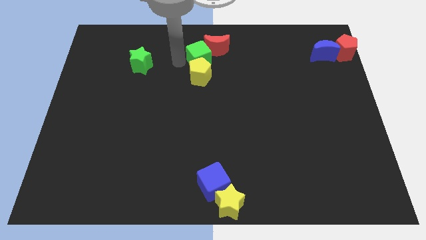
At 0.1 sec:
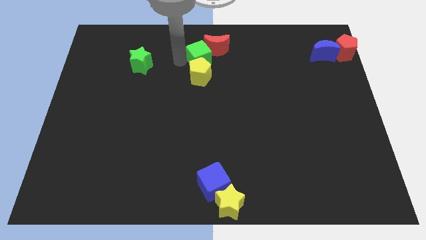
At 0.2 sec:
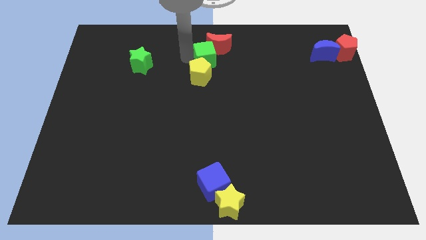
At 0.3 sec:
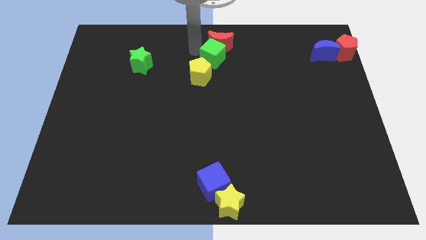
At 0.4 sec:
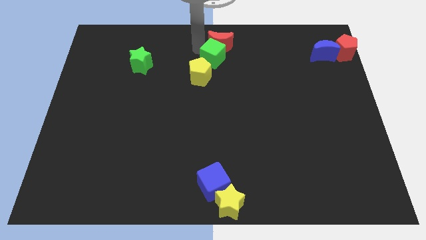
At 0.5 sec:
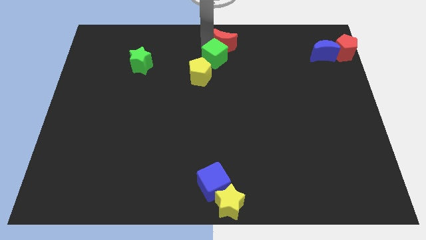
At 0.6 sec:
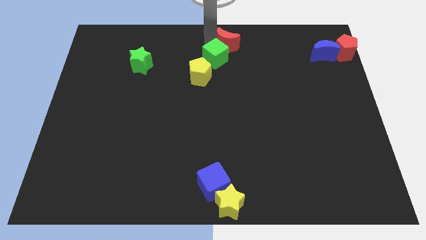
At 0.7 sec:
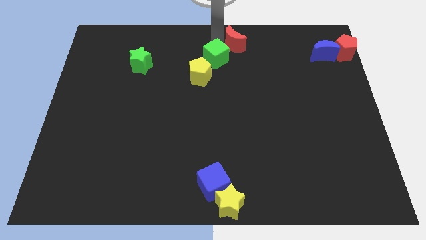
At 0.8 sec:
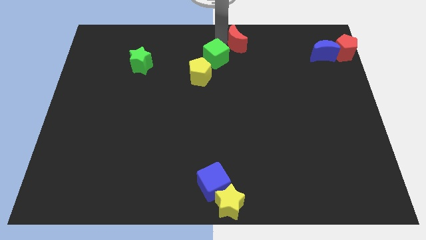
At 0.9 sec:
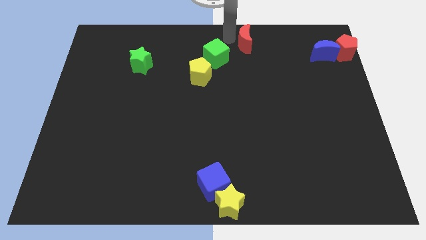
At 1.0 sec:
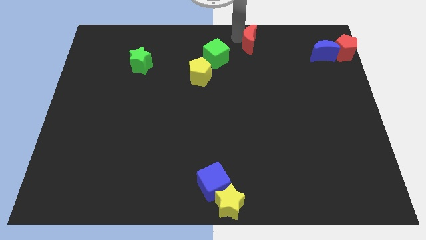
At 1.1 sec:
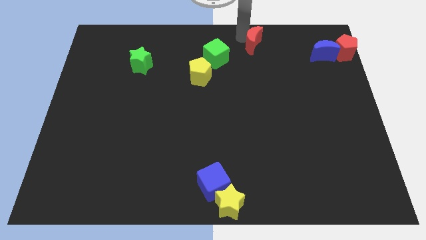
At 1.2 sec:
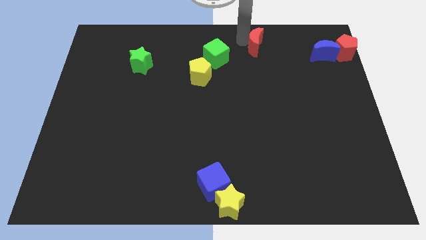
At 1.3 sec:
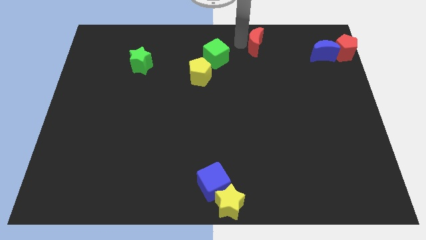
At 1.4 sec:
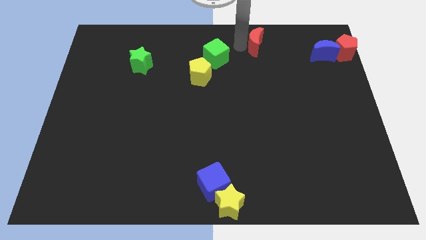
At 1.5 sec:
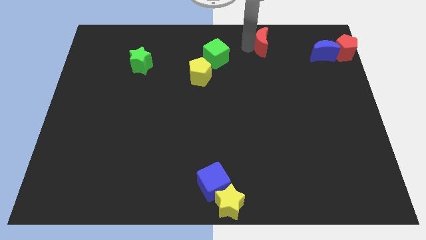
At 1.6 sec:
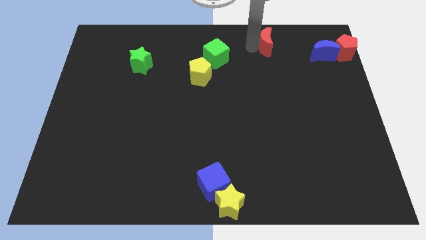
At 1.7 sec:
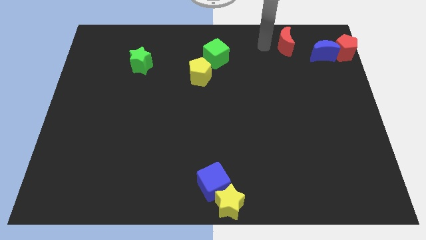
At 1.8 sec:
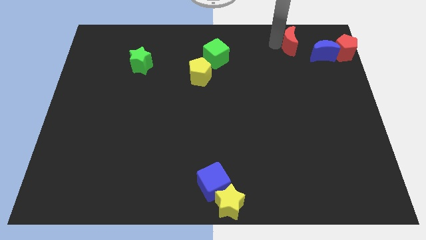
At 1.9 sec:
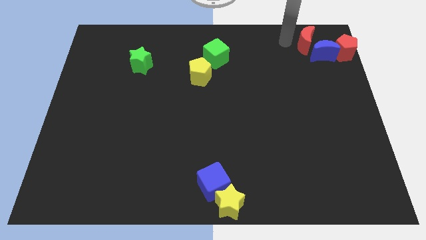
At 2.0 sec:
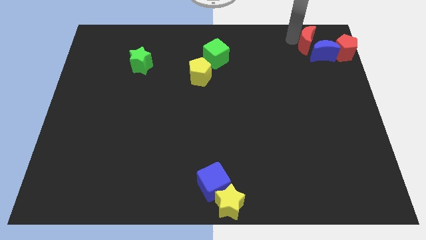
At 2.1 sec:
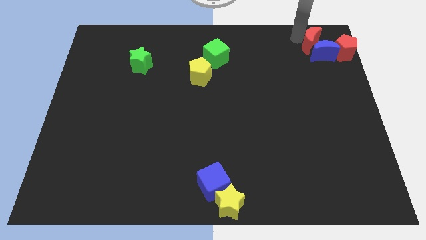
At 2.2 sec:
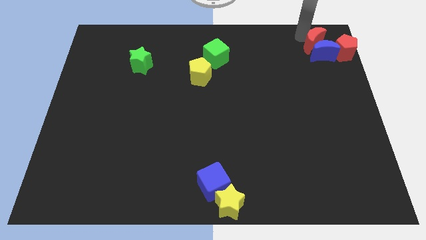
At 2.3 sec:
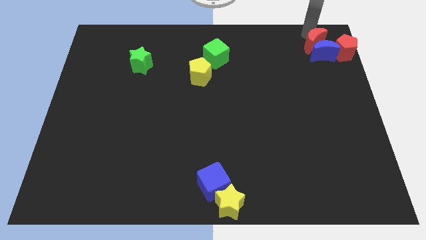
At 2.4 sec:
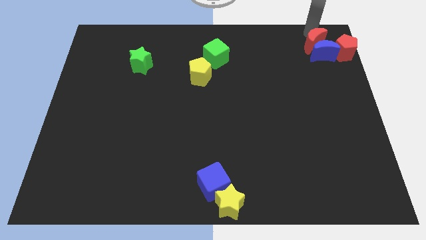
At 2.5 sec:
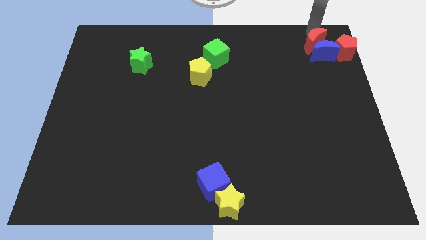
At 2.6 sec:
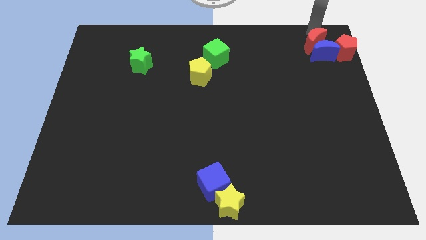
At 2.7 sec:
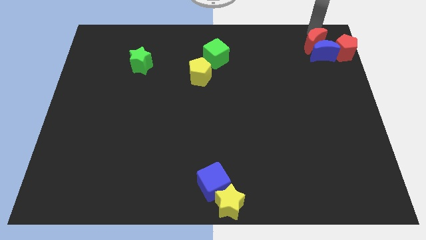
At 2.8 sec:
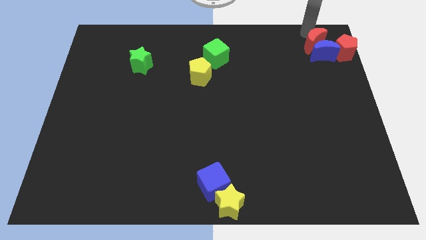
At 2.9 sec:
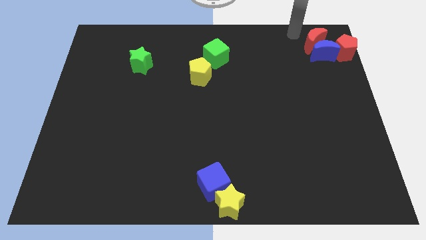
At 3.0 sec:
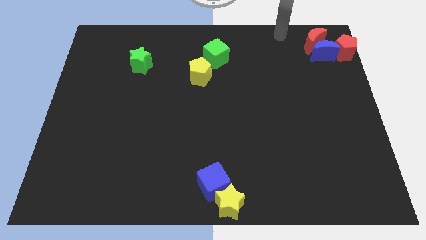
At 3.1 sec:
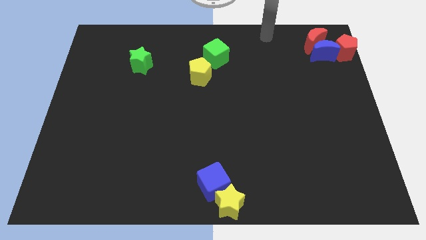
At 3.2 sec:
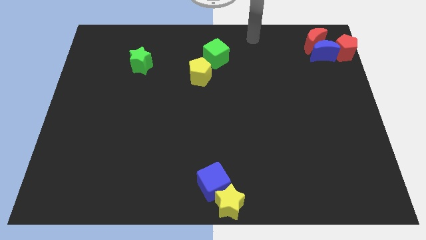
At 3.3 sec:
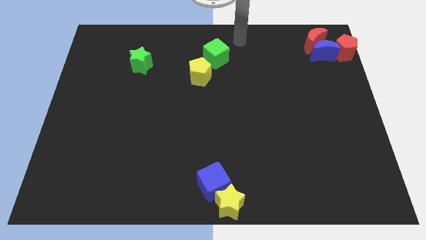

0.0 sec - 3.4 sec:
put the red moon at the top right corner

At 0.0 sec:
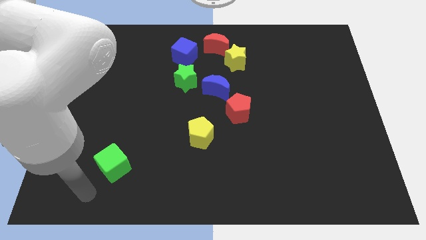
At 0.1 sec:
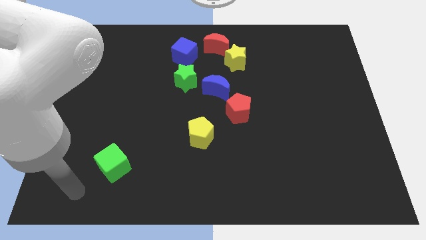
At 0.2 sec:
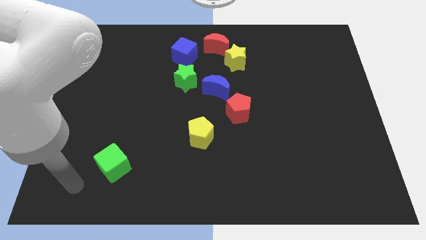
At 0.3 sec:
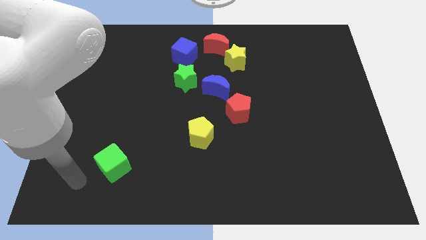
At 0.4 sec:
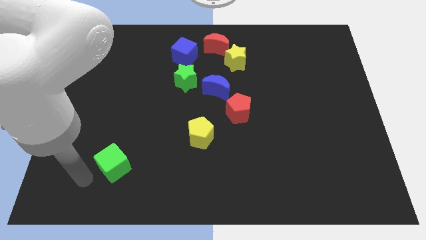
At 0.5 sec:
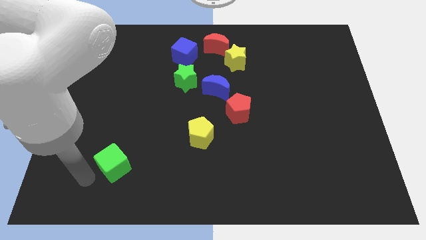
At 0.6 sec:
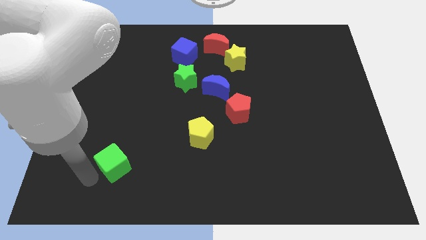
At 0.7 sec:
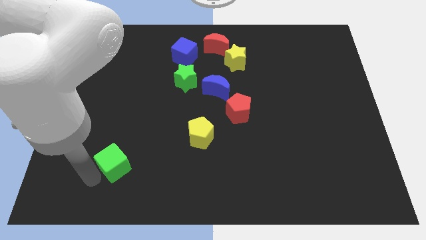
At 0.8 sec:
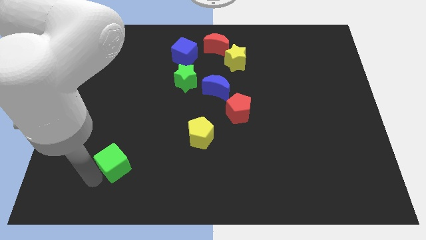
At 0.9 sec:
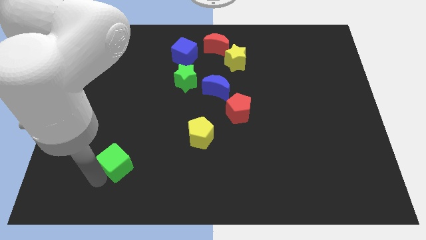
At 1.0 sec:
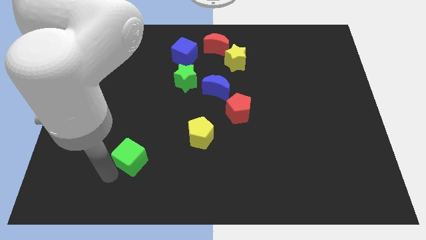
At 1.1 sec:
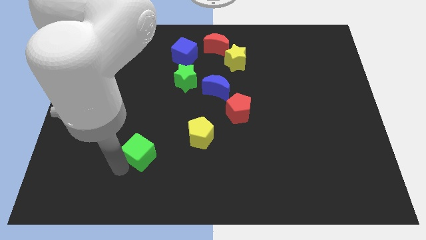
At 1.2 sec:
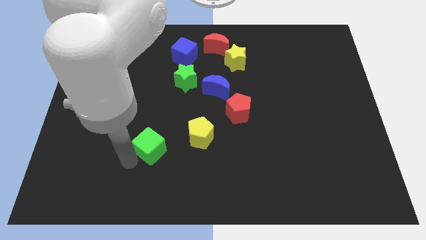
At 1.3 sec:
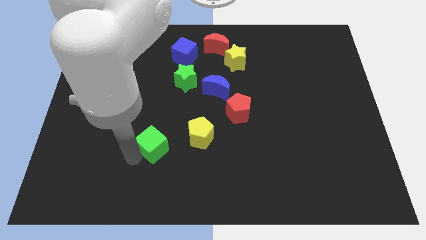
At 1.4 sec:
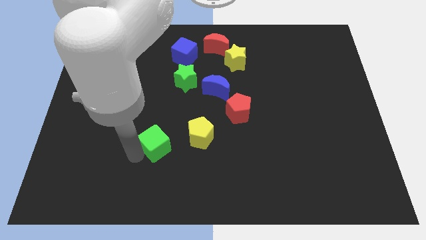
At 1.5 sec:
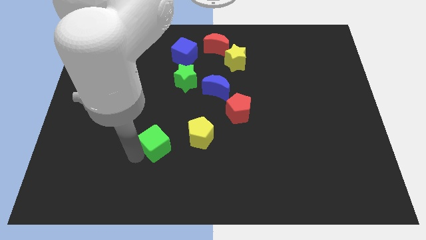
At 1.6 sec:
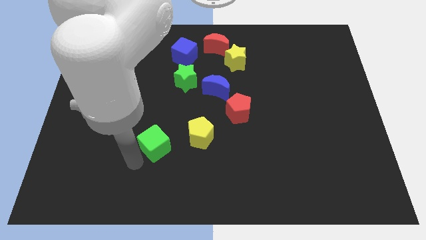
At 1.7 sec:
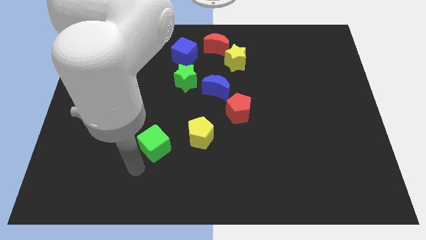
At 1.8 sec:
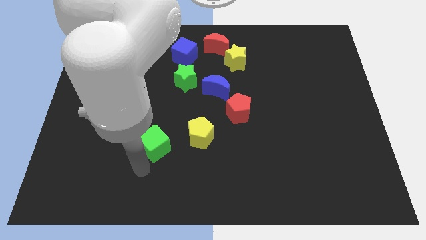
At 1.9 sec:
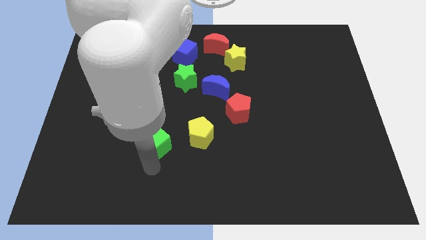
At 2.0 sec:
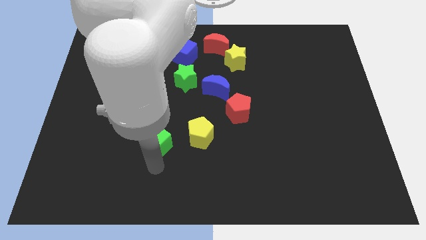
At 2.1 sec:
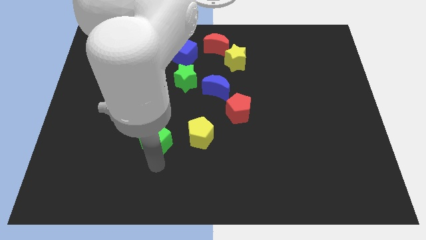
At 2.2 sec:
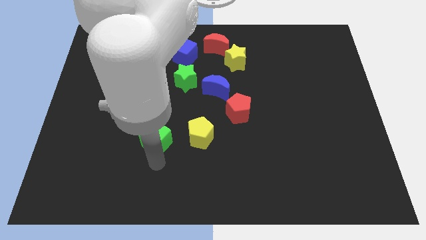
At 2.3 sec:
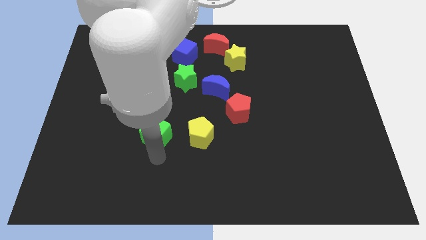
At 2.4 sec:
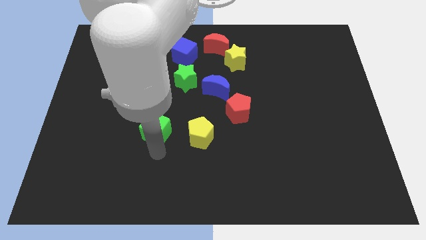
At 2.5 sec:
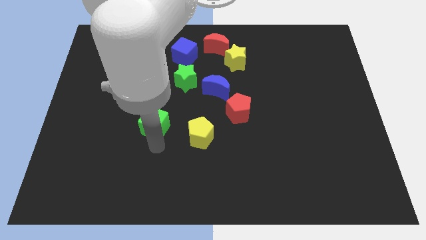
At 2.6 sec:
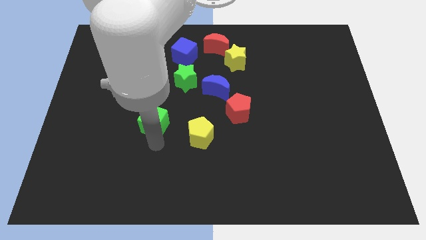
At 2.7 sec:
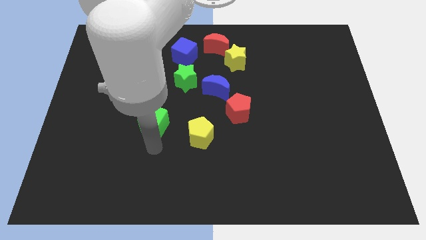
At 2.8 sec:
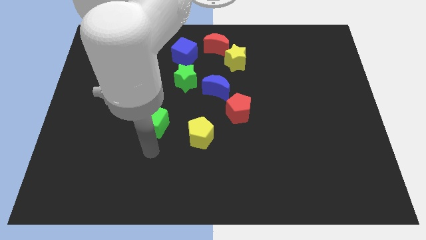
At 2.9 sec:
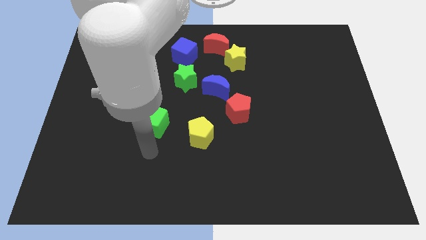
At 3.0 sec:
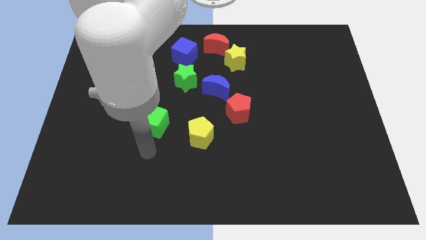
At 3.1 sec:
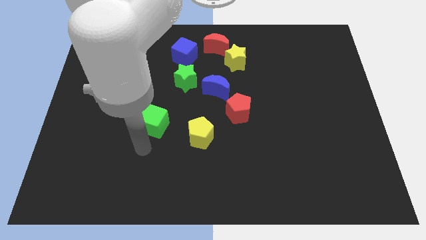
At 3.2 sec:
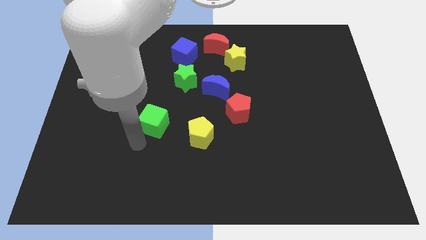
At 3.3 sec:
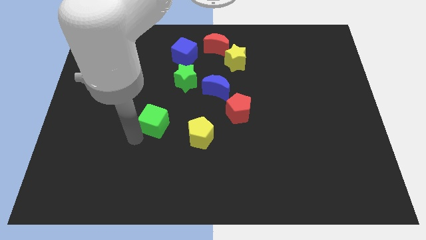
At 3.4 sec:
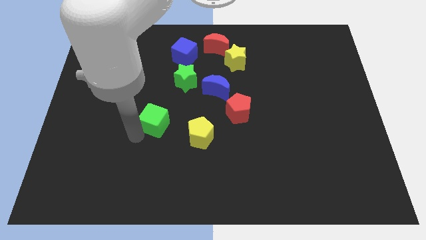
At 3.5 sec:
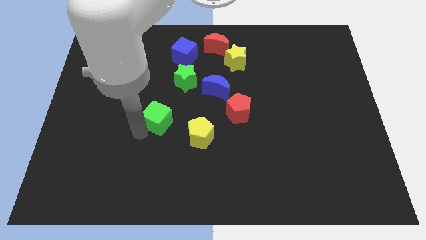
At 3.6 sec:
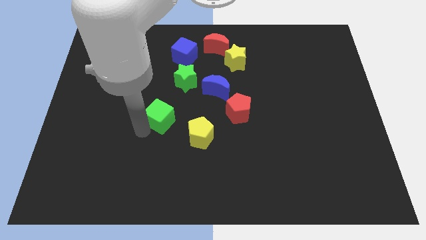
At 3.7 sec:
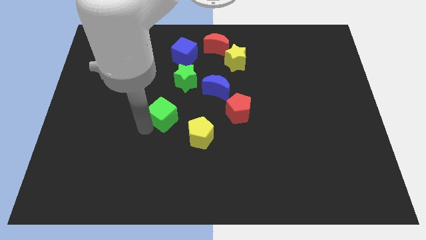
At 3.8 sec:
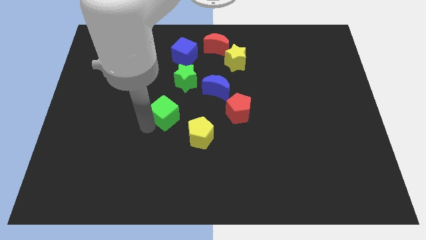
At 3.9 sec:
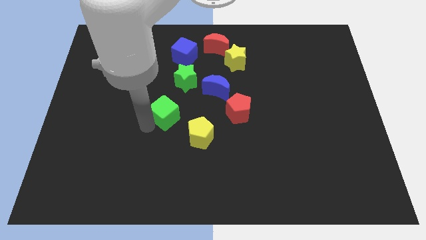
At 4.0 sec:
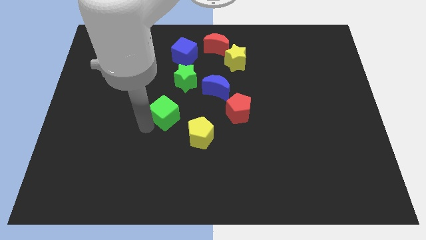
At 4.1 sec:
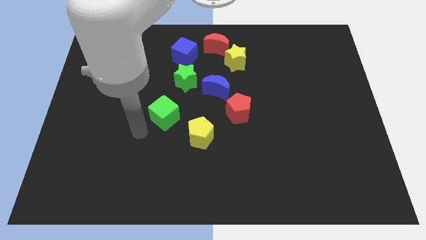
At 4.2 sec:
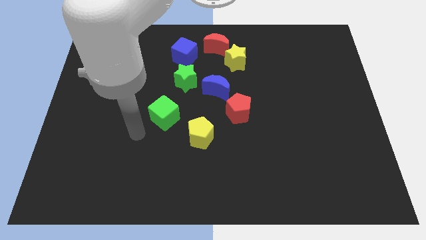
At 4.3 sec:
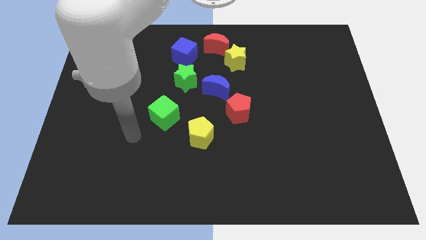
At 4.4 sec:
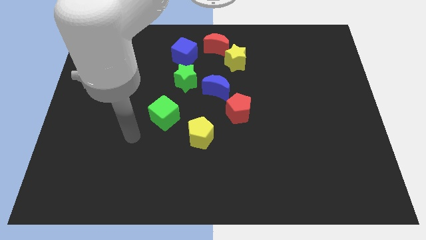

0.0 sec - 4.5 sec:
place green cube diagonally above yellow pentagon

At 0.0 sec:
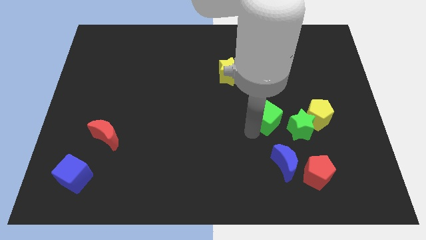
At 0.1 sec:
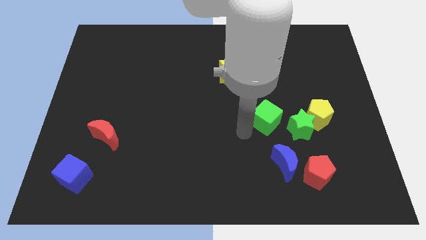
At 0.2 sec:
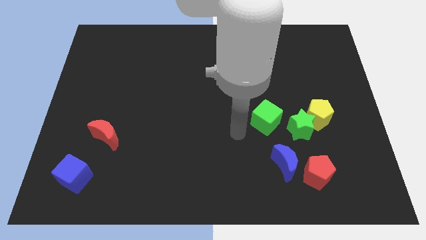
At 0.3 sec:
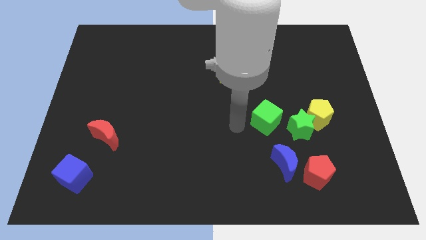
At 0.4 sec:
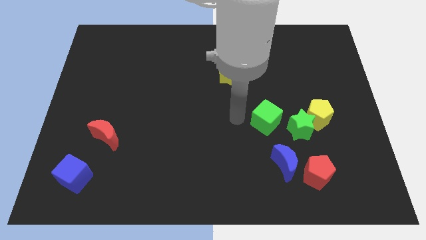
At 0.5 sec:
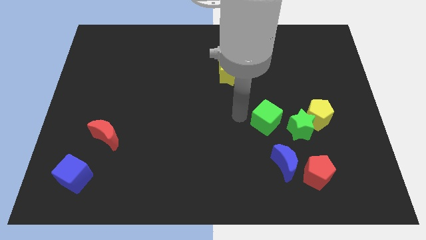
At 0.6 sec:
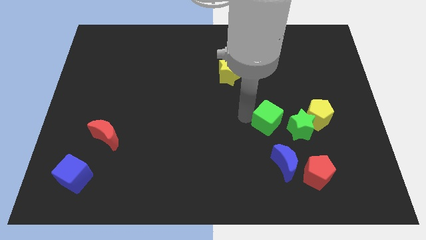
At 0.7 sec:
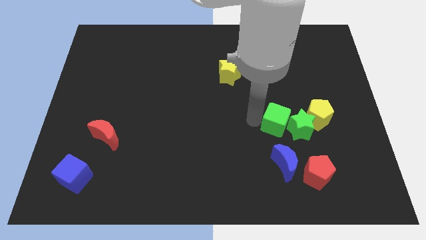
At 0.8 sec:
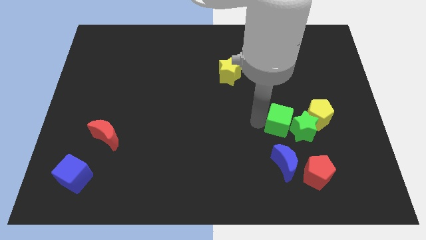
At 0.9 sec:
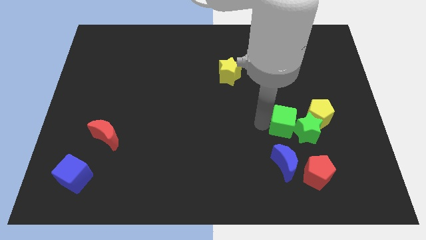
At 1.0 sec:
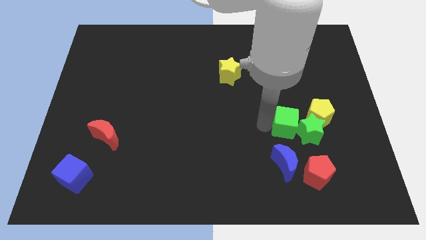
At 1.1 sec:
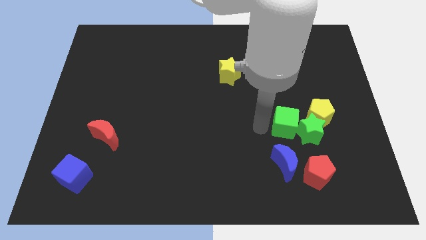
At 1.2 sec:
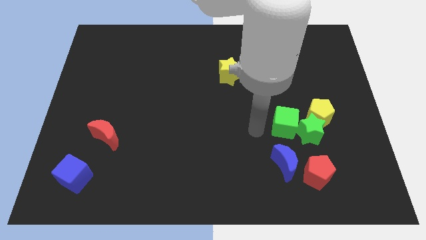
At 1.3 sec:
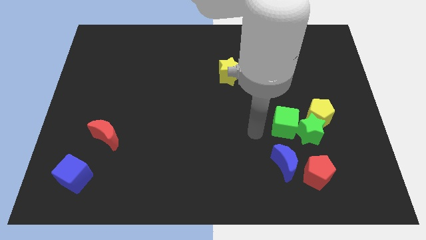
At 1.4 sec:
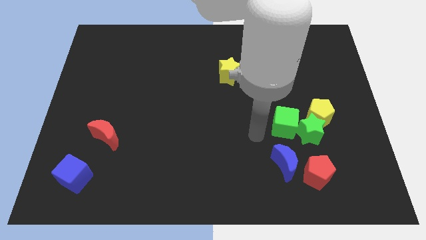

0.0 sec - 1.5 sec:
push the green cube into the green star
